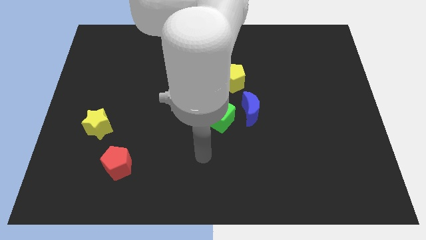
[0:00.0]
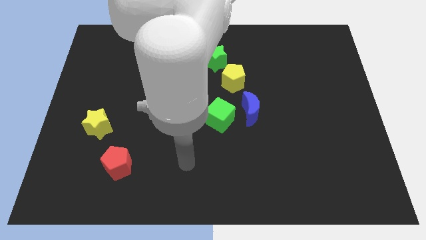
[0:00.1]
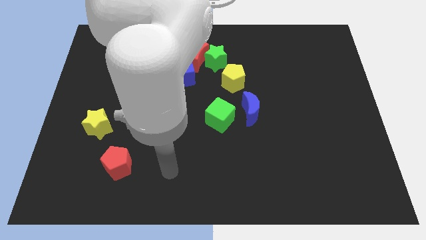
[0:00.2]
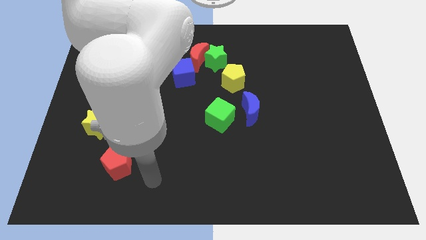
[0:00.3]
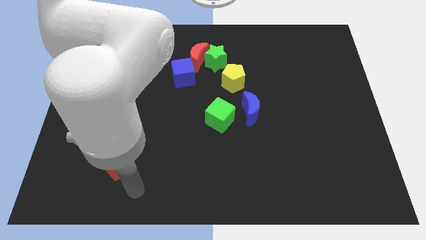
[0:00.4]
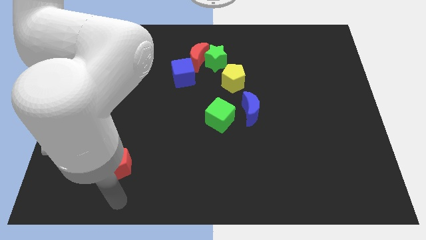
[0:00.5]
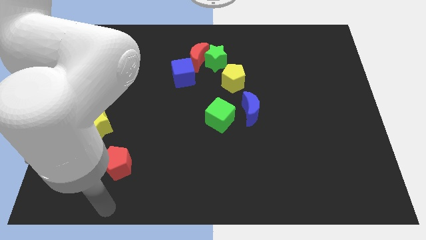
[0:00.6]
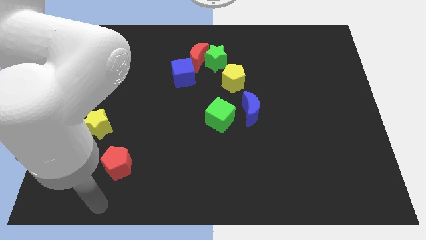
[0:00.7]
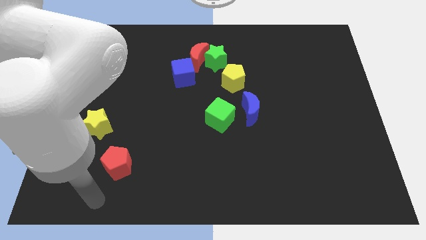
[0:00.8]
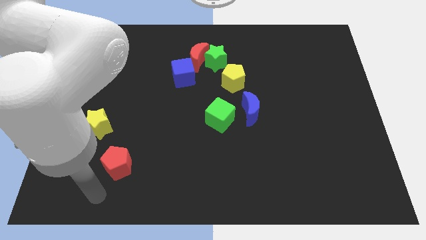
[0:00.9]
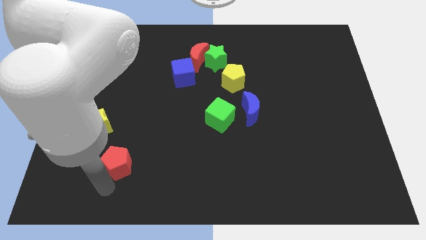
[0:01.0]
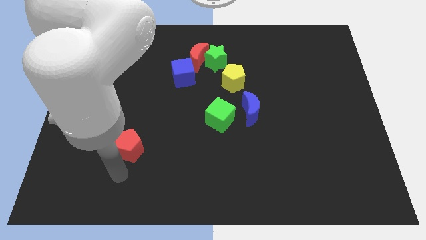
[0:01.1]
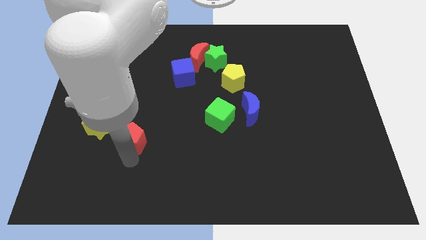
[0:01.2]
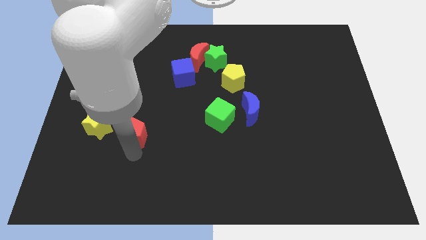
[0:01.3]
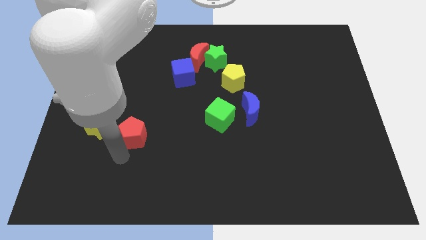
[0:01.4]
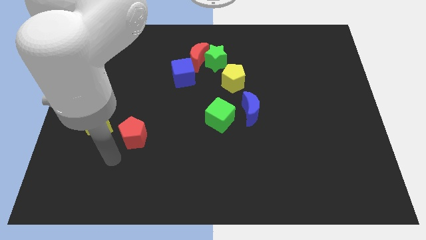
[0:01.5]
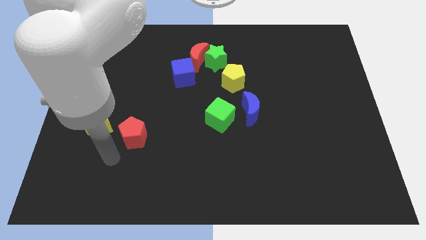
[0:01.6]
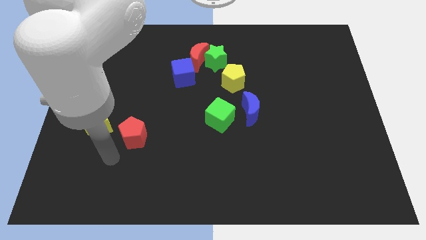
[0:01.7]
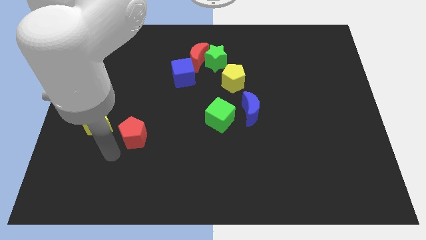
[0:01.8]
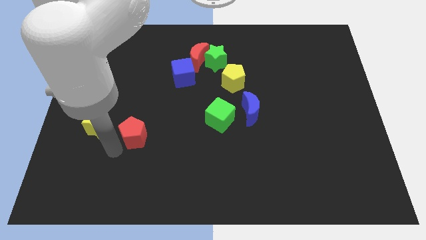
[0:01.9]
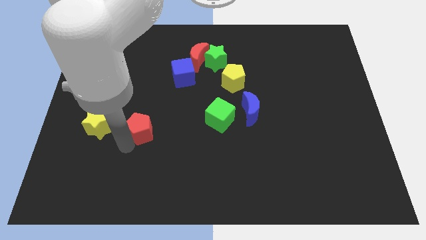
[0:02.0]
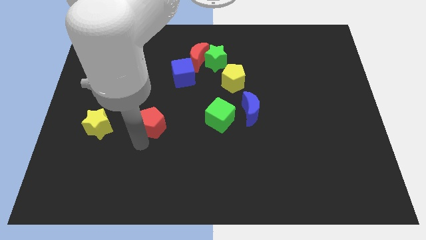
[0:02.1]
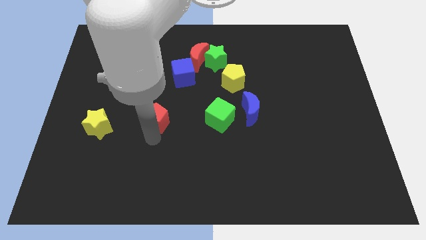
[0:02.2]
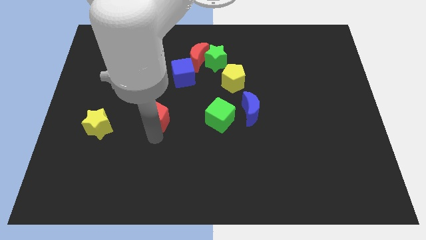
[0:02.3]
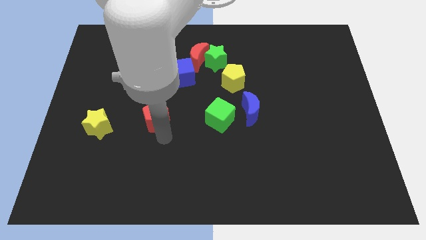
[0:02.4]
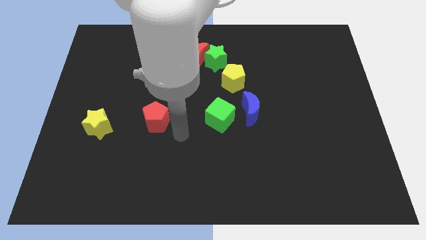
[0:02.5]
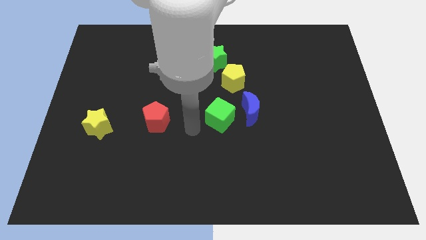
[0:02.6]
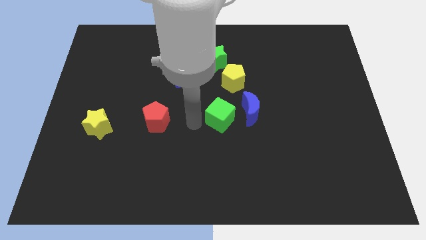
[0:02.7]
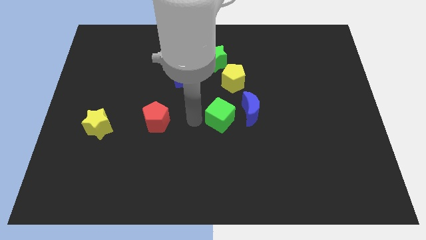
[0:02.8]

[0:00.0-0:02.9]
move red pentagon horizontally towards green cube

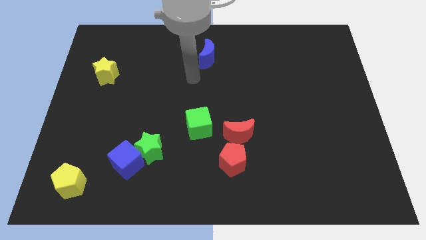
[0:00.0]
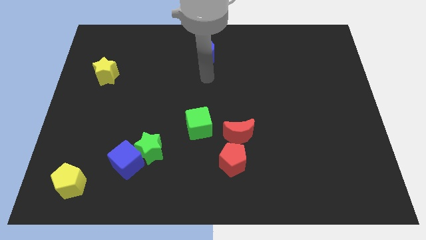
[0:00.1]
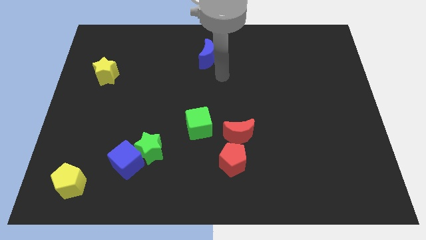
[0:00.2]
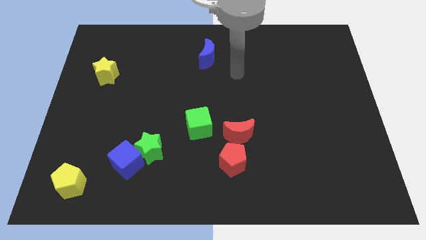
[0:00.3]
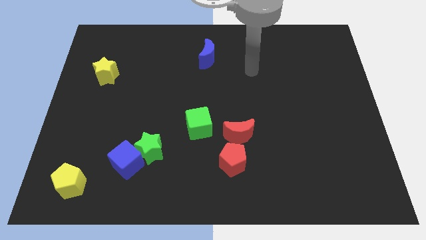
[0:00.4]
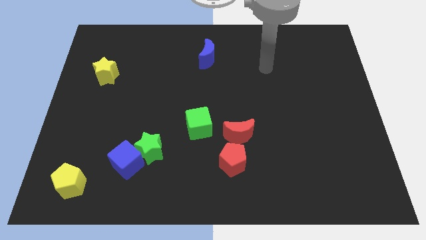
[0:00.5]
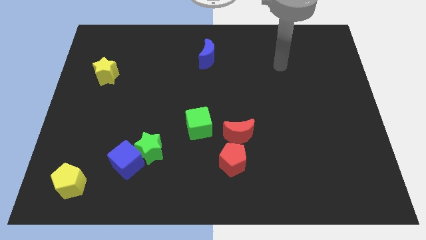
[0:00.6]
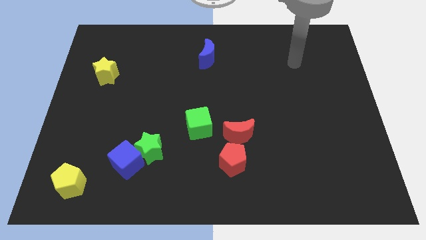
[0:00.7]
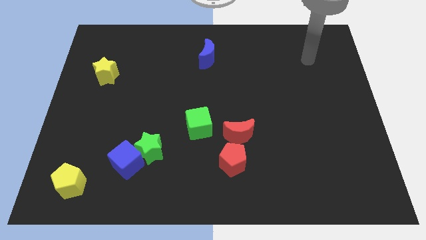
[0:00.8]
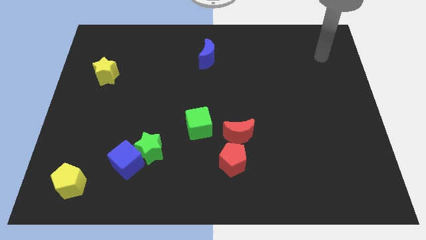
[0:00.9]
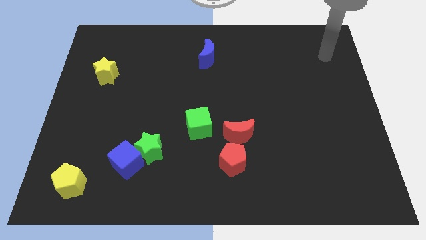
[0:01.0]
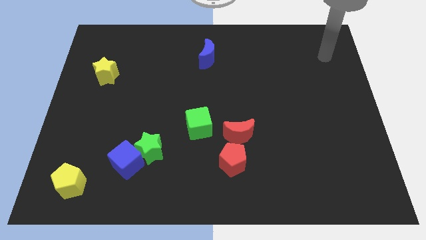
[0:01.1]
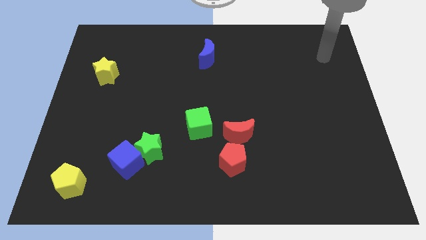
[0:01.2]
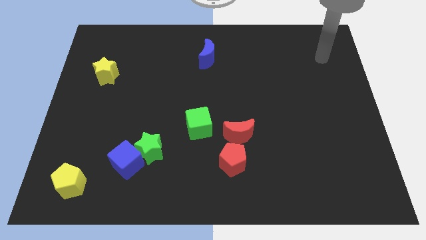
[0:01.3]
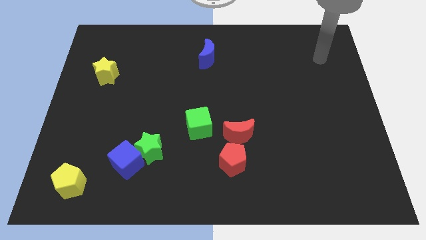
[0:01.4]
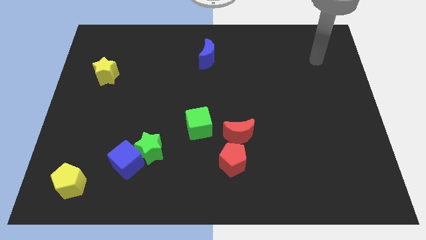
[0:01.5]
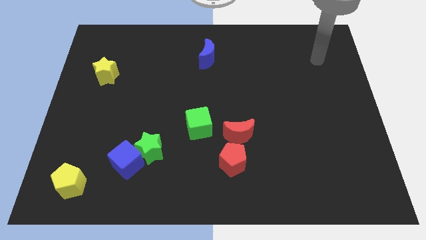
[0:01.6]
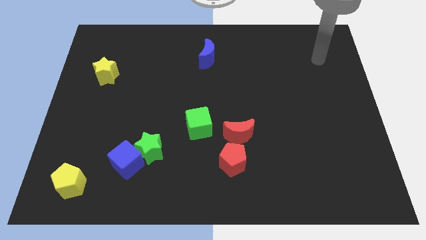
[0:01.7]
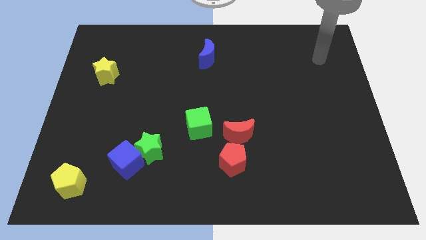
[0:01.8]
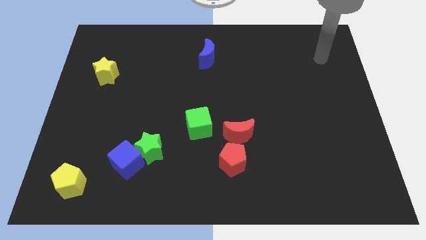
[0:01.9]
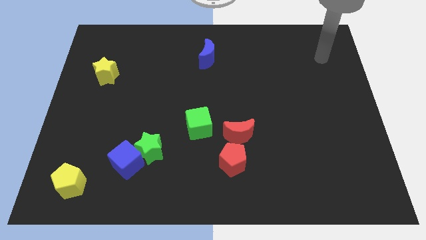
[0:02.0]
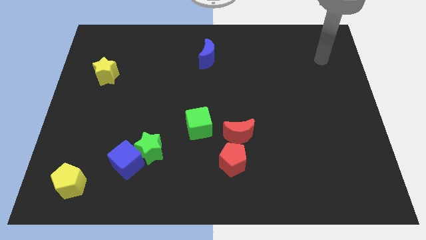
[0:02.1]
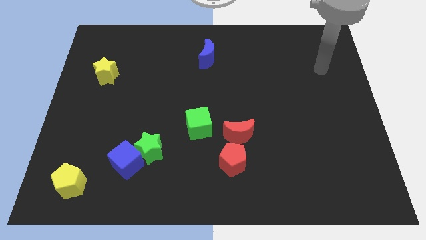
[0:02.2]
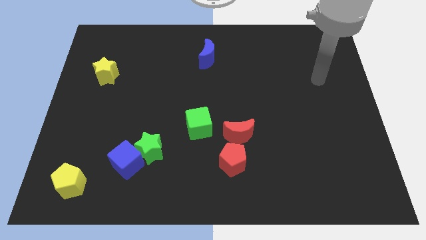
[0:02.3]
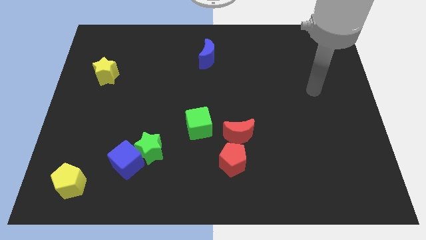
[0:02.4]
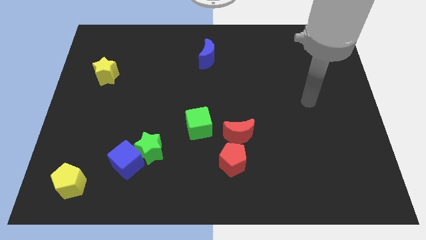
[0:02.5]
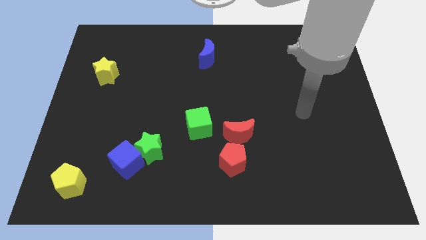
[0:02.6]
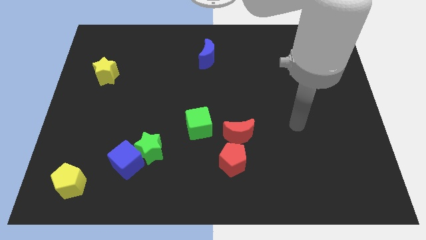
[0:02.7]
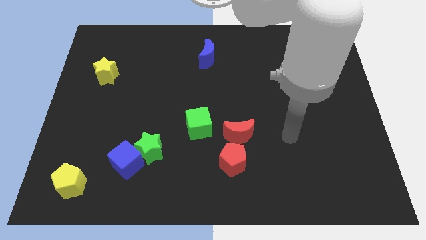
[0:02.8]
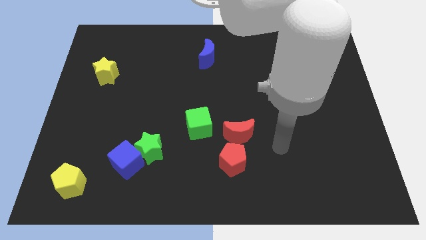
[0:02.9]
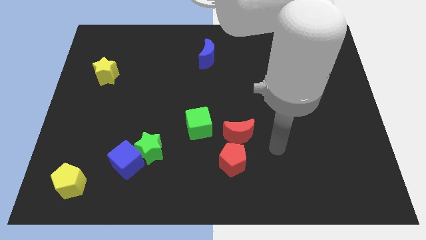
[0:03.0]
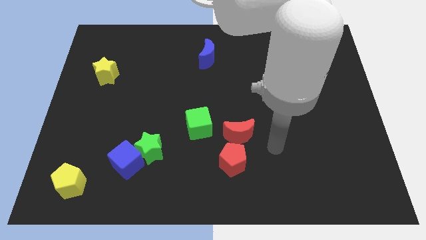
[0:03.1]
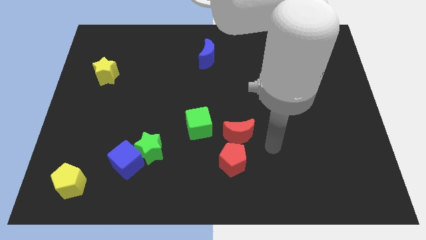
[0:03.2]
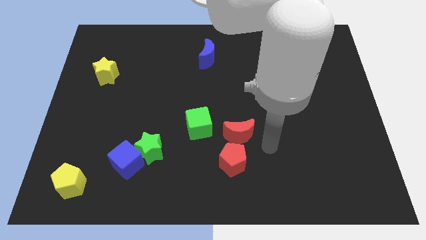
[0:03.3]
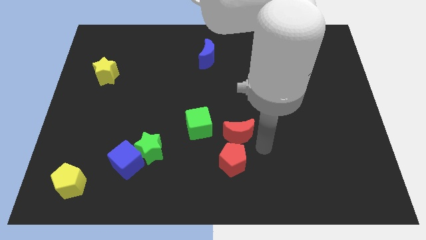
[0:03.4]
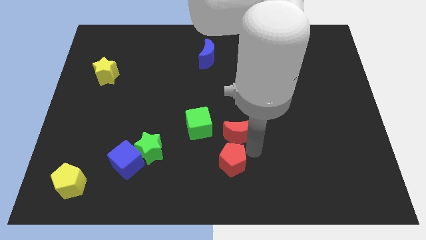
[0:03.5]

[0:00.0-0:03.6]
move your arm towards the red blocks

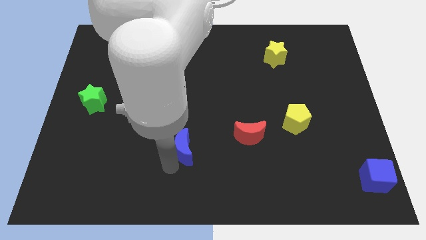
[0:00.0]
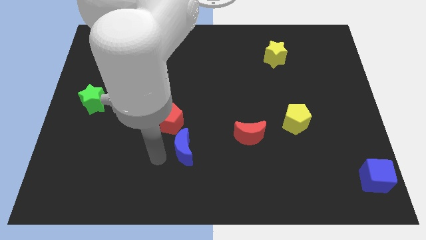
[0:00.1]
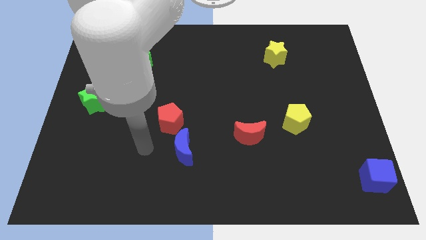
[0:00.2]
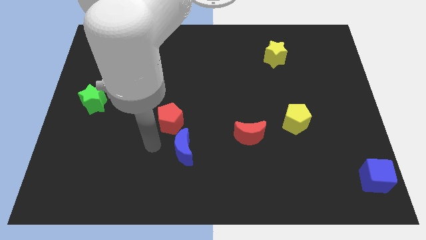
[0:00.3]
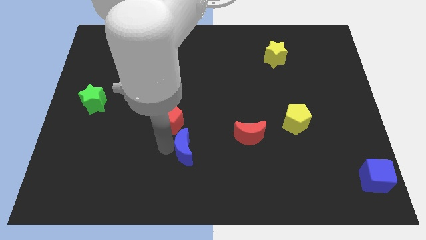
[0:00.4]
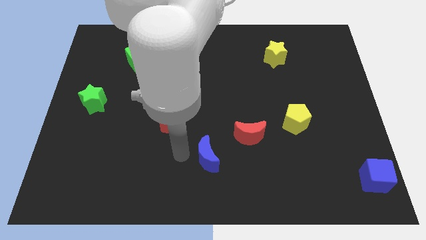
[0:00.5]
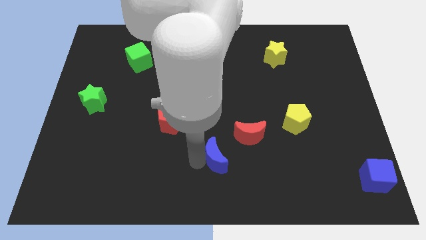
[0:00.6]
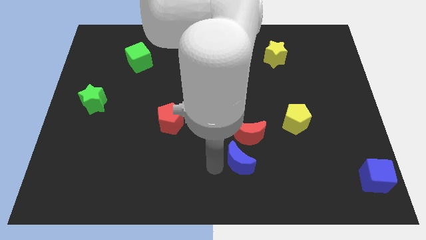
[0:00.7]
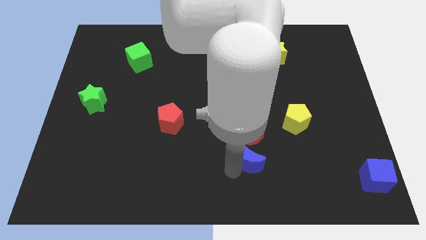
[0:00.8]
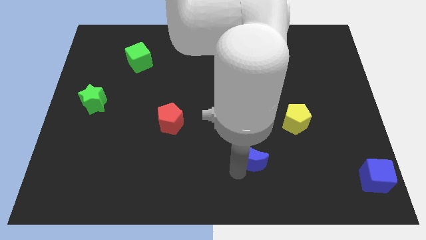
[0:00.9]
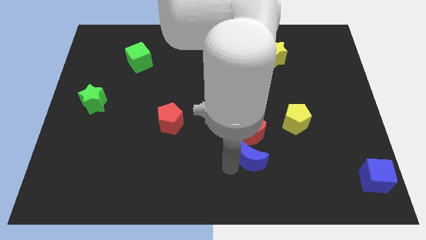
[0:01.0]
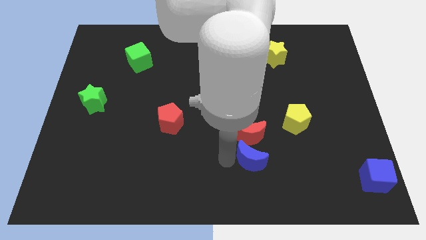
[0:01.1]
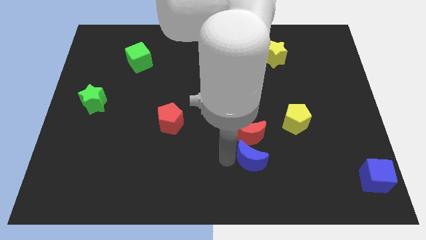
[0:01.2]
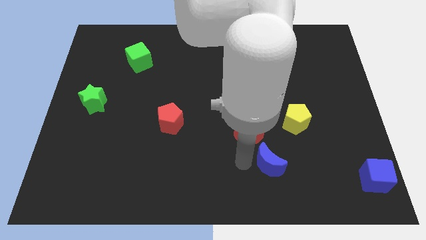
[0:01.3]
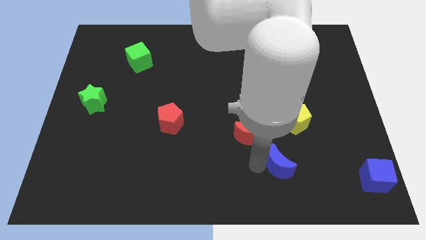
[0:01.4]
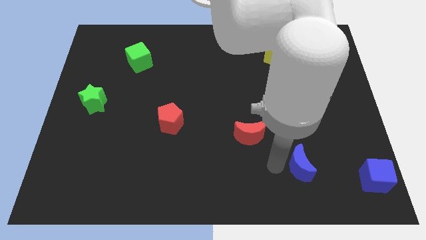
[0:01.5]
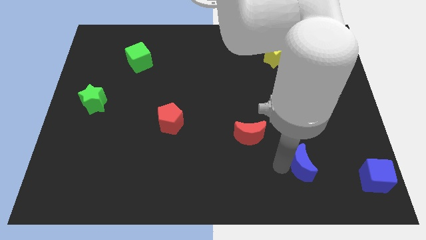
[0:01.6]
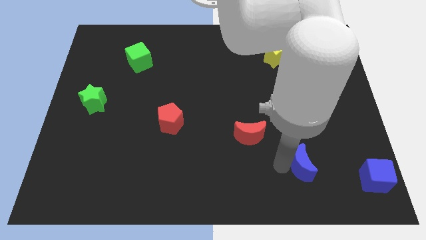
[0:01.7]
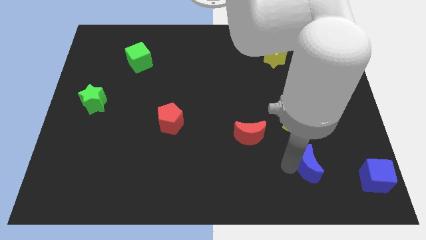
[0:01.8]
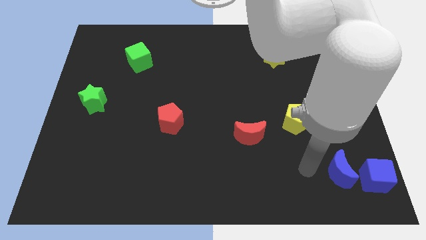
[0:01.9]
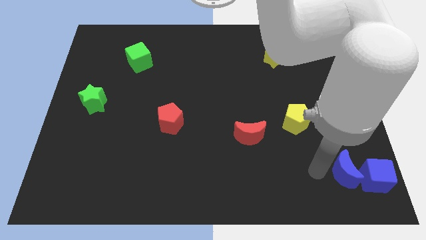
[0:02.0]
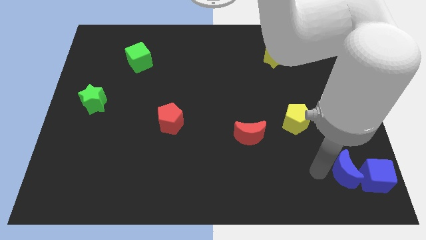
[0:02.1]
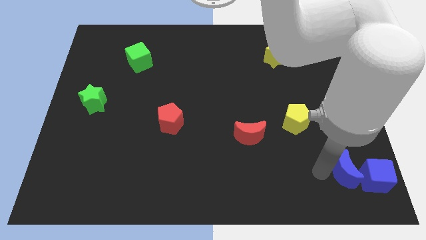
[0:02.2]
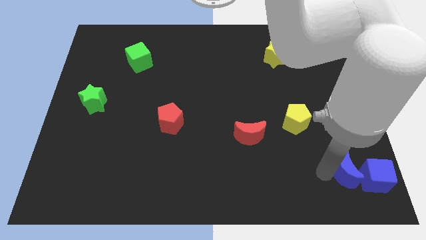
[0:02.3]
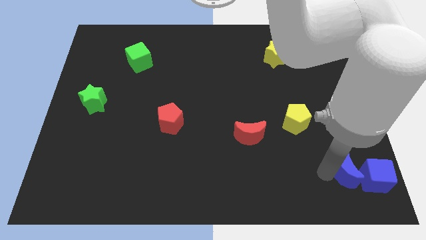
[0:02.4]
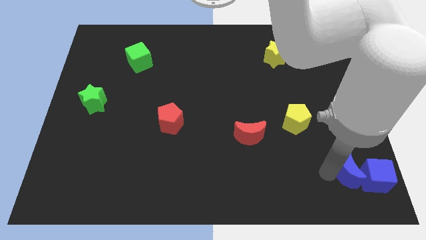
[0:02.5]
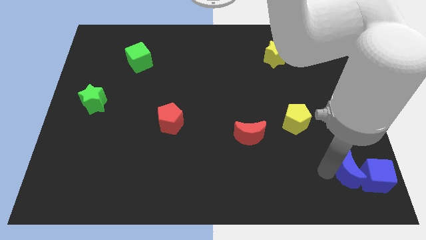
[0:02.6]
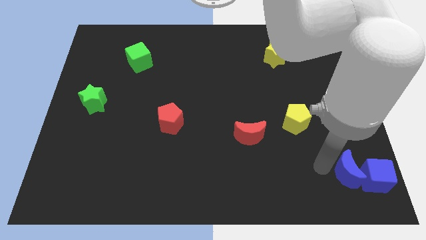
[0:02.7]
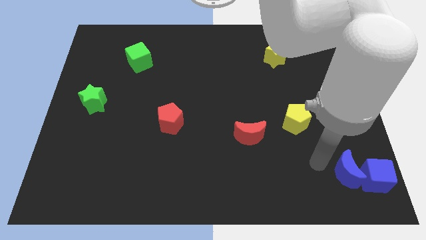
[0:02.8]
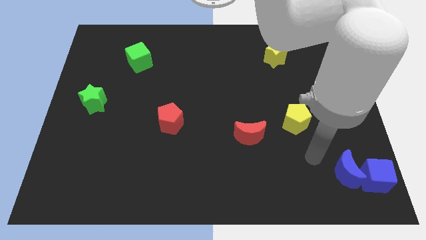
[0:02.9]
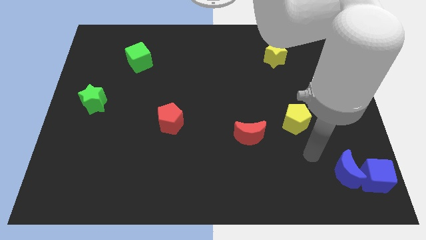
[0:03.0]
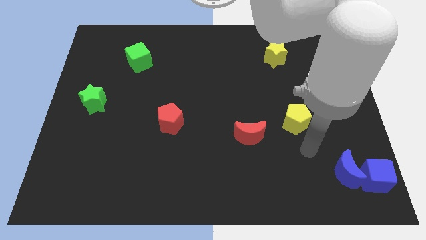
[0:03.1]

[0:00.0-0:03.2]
place the blue moon to the left of the blue cube
